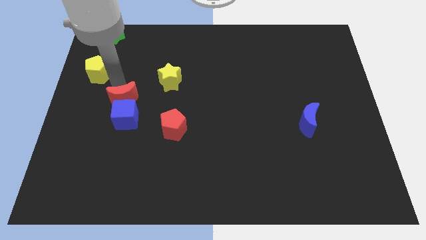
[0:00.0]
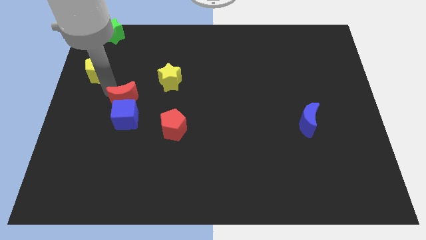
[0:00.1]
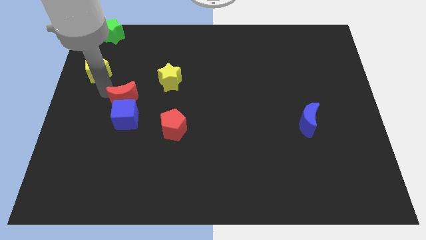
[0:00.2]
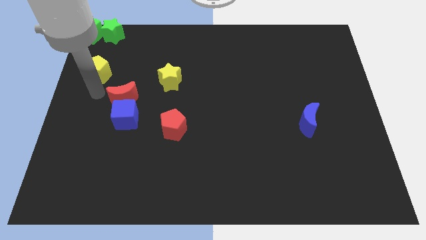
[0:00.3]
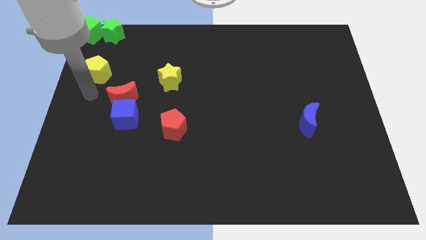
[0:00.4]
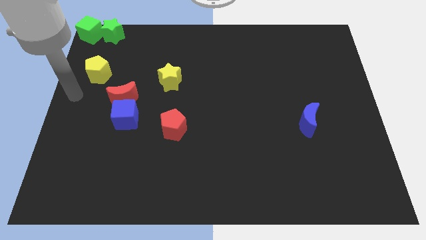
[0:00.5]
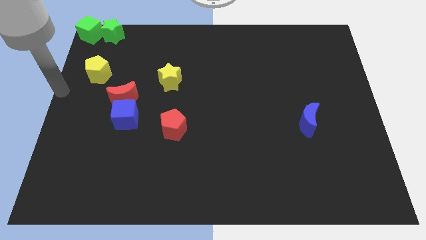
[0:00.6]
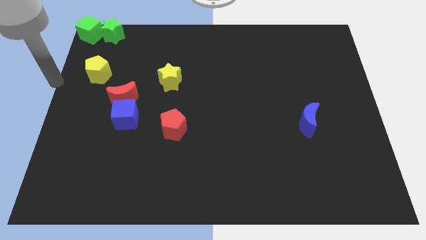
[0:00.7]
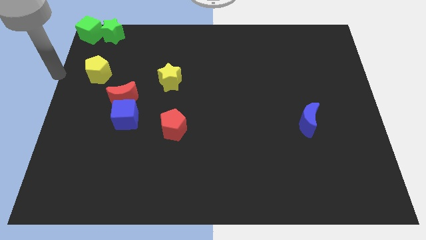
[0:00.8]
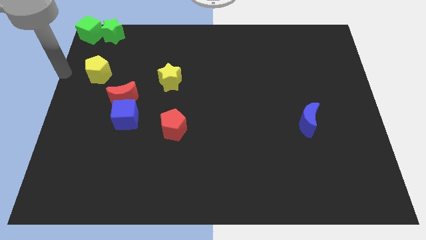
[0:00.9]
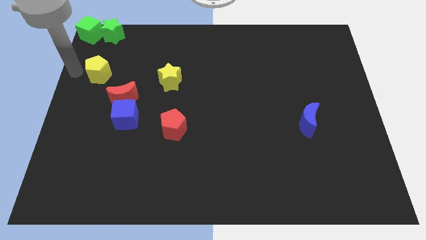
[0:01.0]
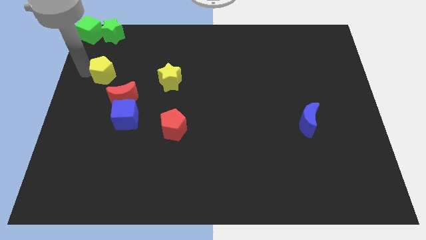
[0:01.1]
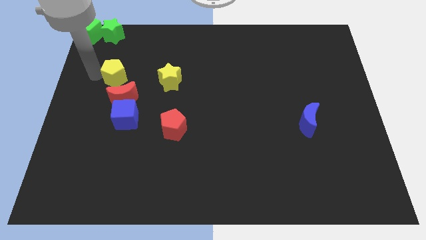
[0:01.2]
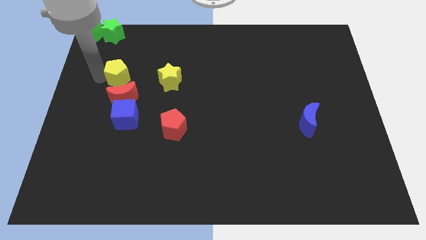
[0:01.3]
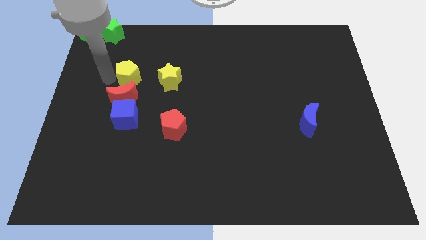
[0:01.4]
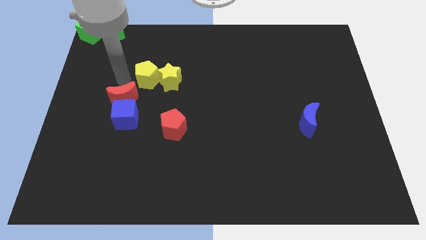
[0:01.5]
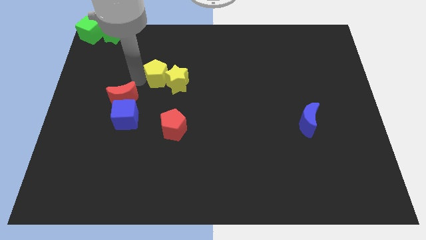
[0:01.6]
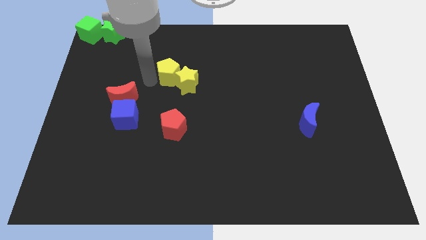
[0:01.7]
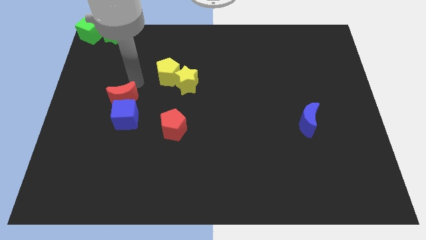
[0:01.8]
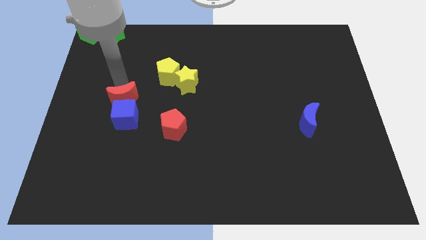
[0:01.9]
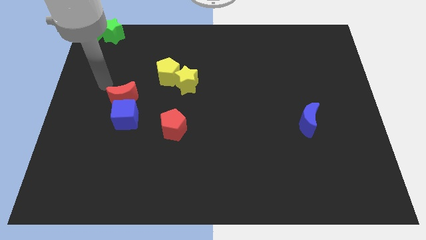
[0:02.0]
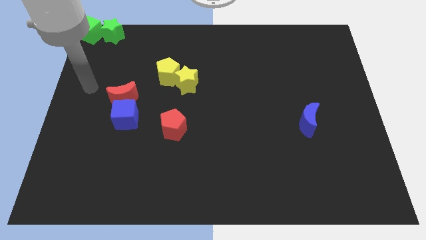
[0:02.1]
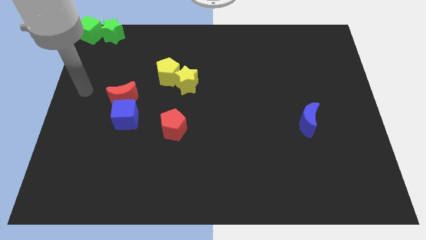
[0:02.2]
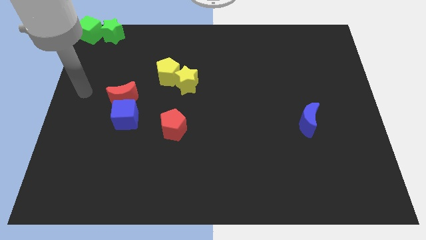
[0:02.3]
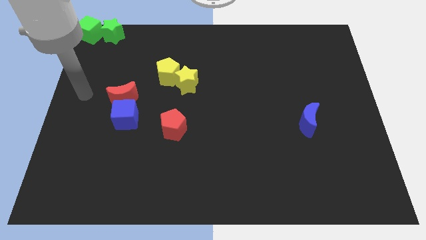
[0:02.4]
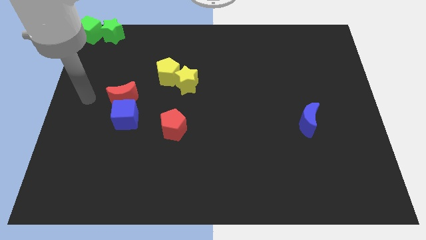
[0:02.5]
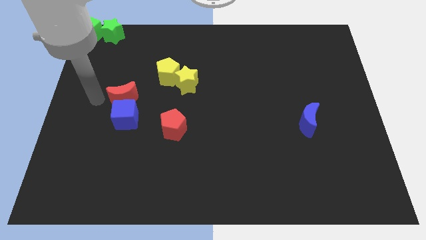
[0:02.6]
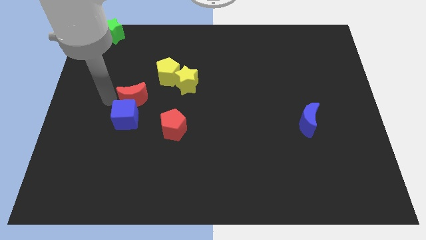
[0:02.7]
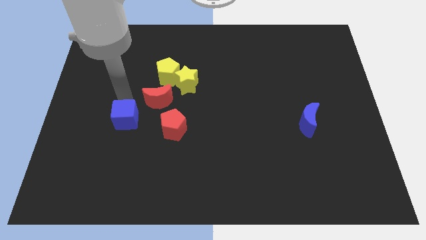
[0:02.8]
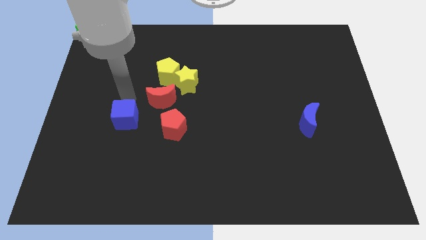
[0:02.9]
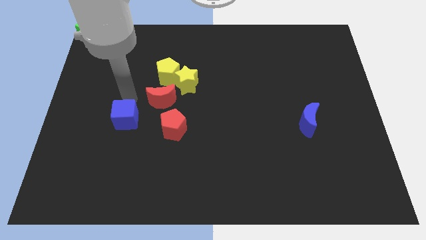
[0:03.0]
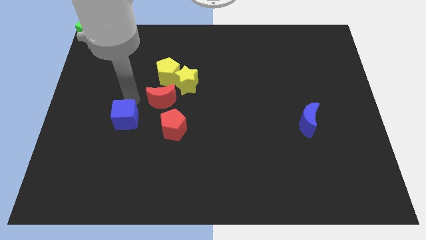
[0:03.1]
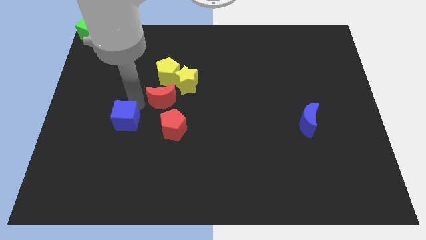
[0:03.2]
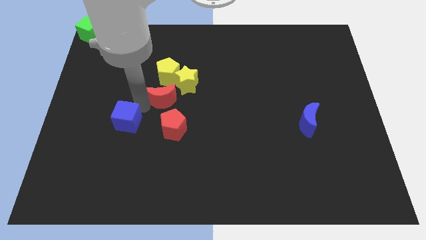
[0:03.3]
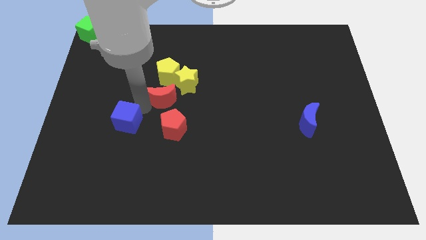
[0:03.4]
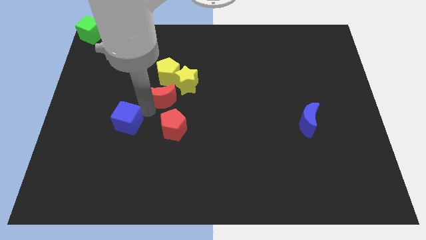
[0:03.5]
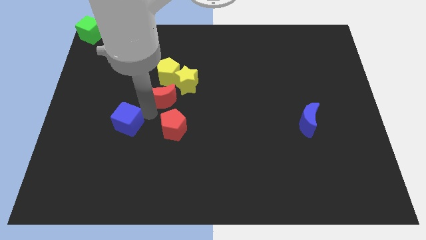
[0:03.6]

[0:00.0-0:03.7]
move red moon and yellow pentagon into yellow star

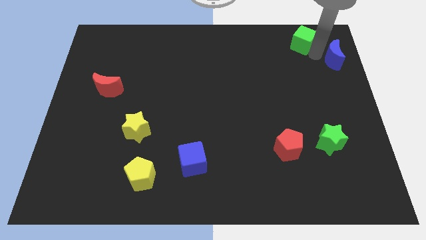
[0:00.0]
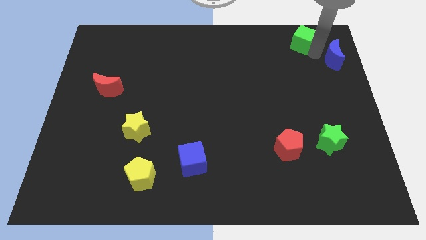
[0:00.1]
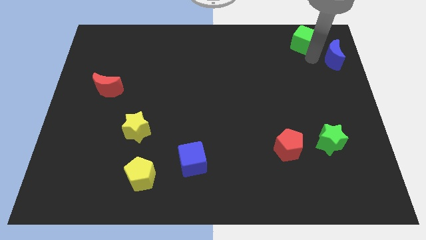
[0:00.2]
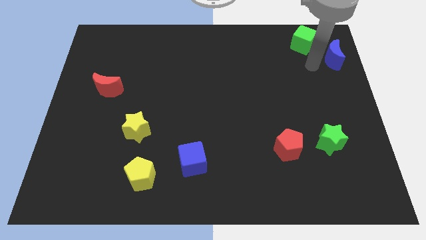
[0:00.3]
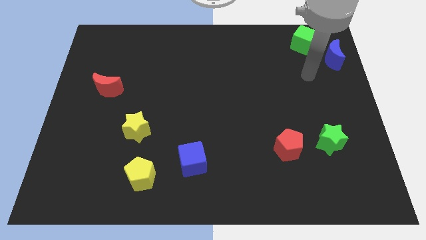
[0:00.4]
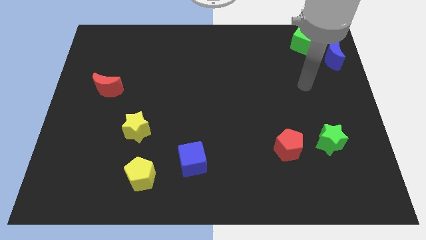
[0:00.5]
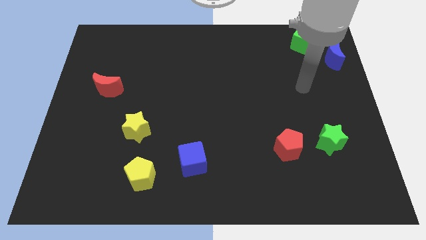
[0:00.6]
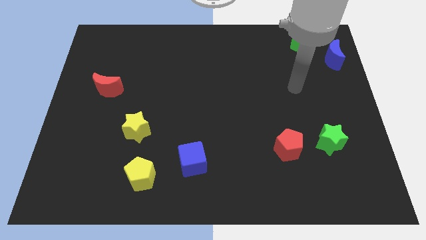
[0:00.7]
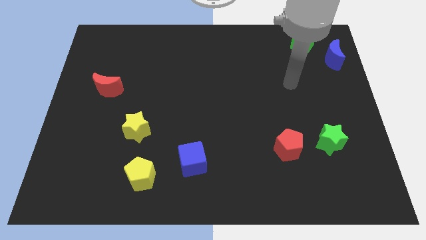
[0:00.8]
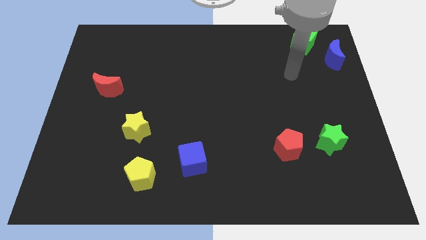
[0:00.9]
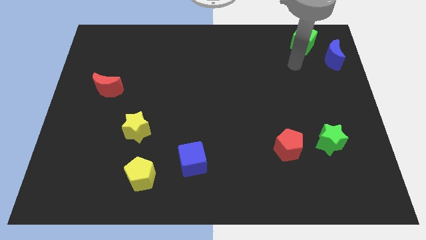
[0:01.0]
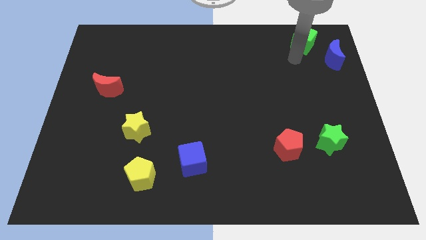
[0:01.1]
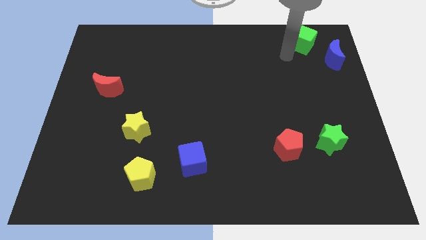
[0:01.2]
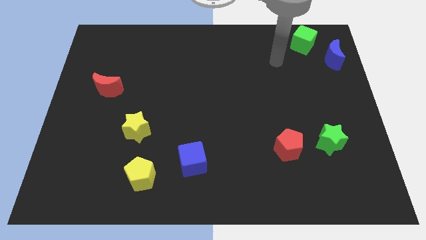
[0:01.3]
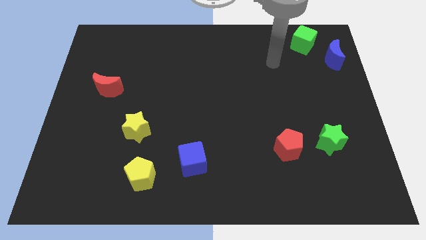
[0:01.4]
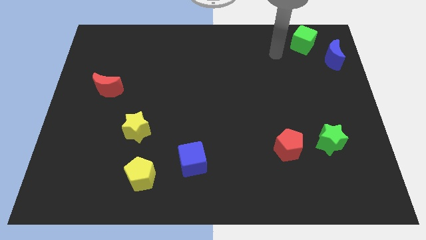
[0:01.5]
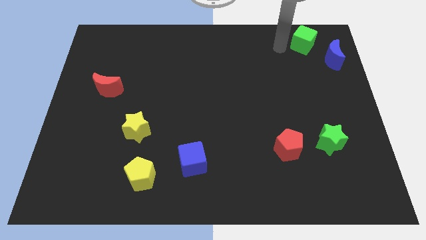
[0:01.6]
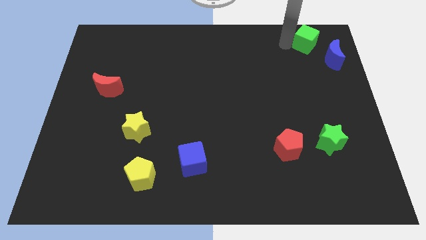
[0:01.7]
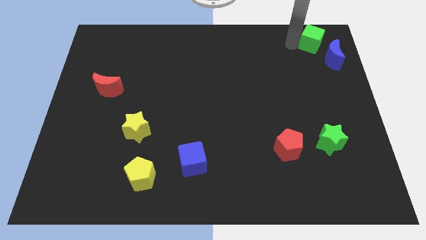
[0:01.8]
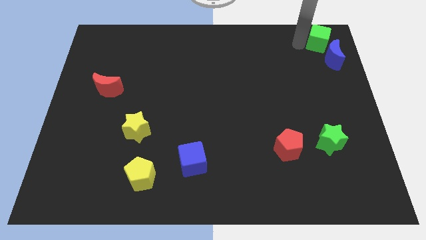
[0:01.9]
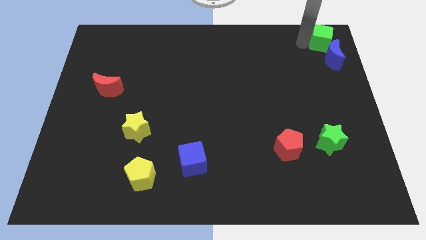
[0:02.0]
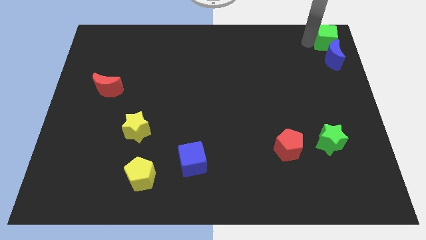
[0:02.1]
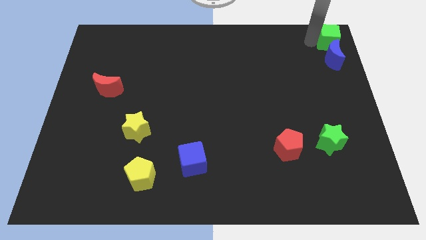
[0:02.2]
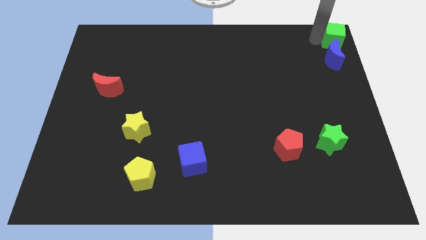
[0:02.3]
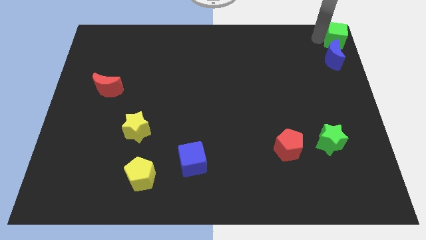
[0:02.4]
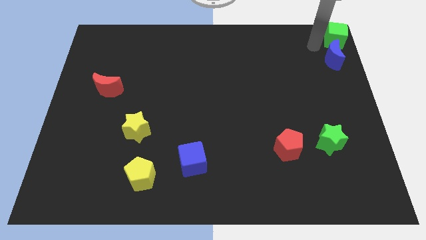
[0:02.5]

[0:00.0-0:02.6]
place the green cube to the top right corner side

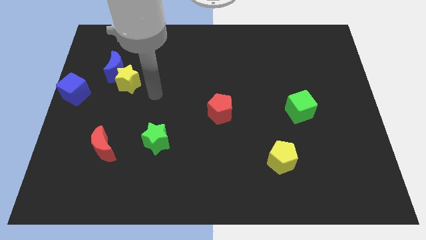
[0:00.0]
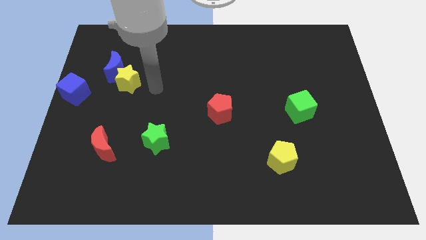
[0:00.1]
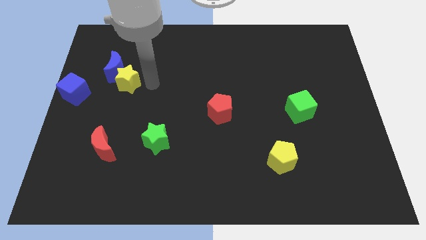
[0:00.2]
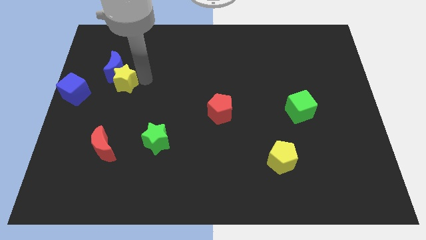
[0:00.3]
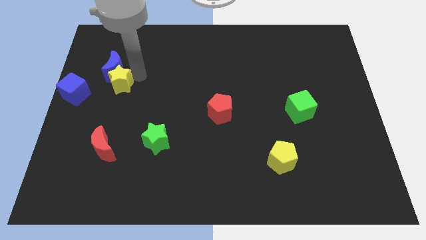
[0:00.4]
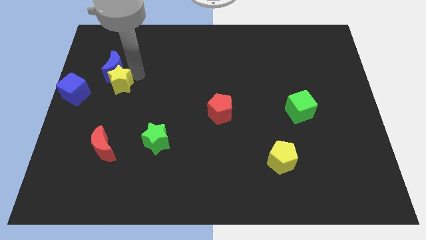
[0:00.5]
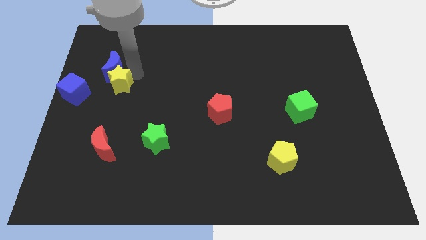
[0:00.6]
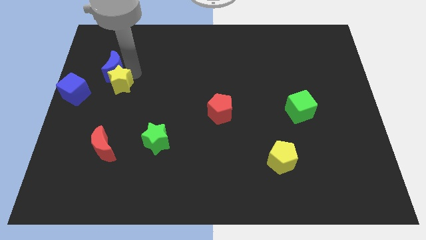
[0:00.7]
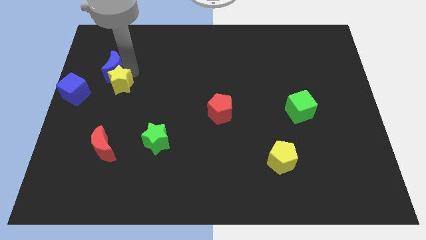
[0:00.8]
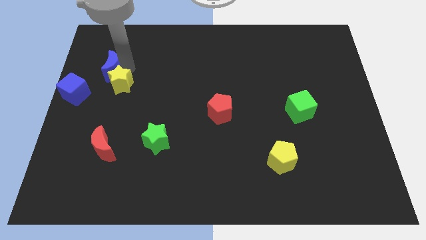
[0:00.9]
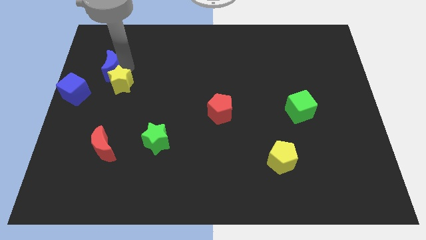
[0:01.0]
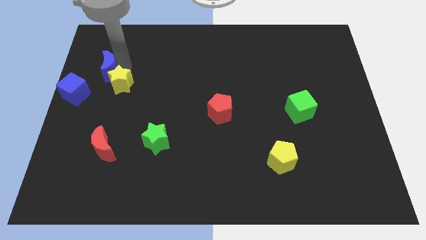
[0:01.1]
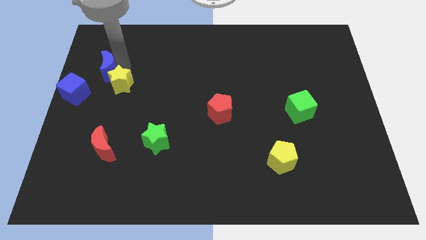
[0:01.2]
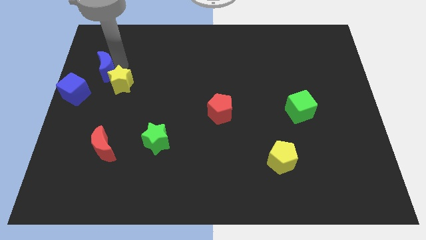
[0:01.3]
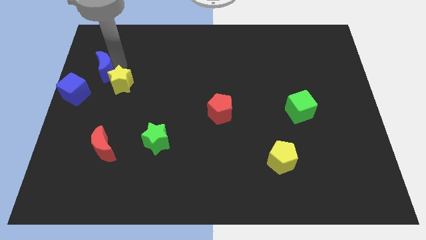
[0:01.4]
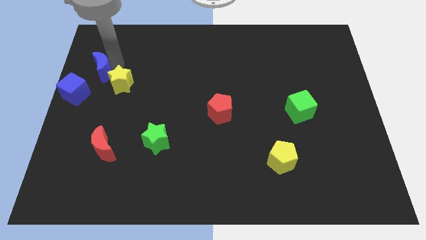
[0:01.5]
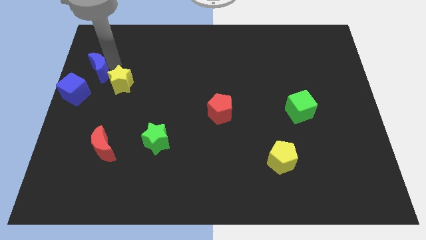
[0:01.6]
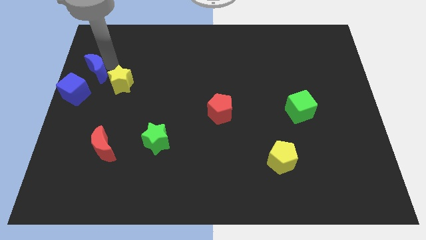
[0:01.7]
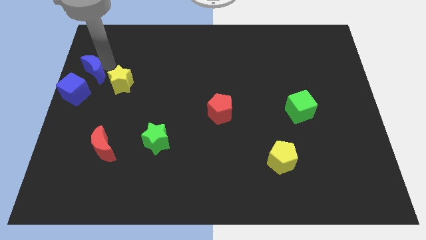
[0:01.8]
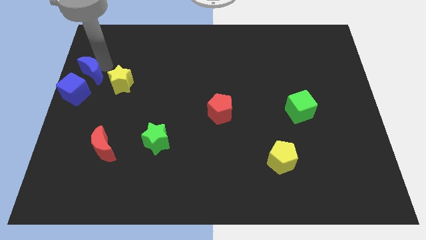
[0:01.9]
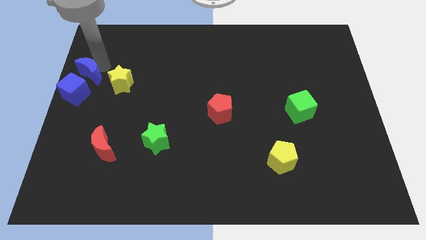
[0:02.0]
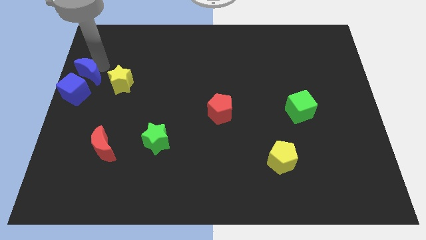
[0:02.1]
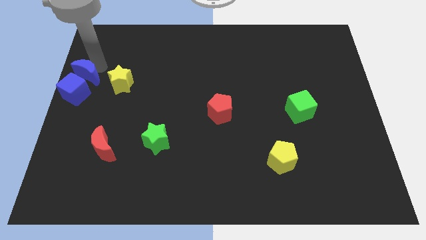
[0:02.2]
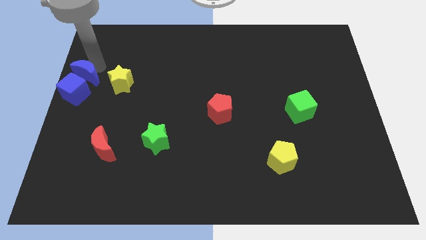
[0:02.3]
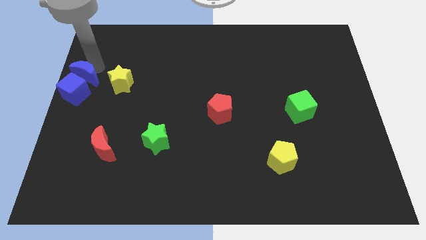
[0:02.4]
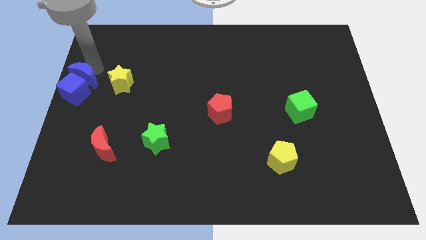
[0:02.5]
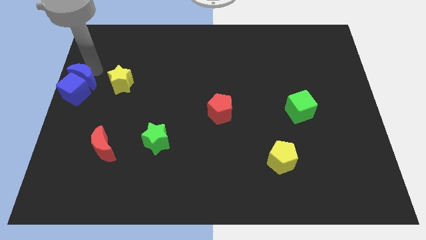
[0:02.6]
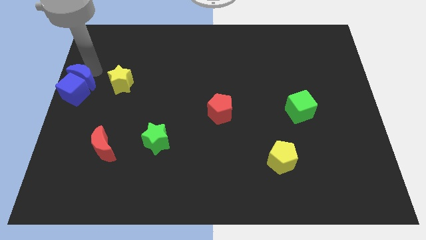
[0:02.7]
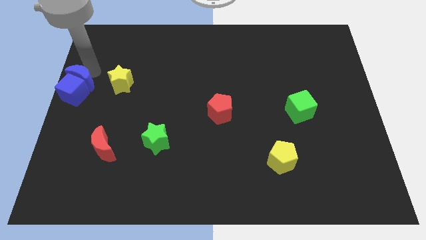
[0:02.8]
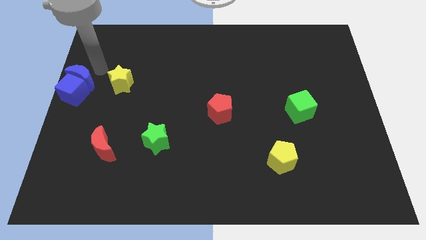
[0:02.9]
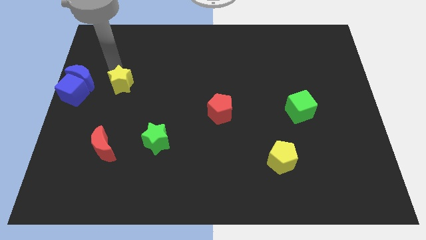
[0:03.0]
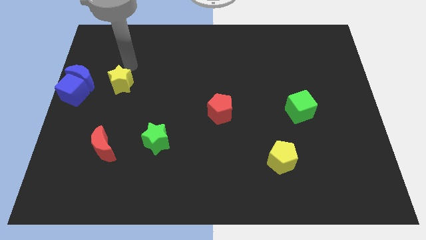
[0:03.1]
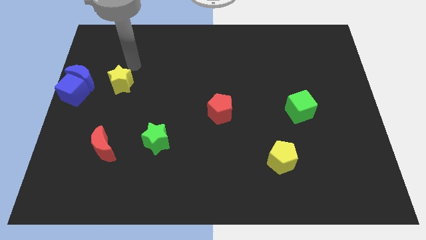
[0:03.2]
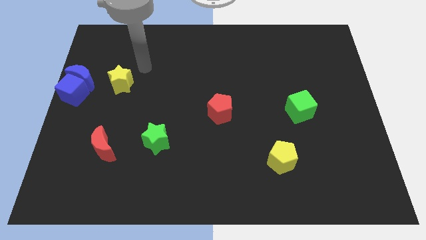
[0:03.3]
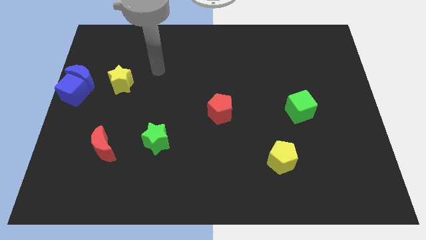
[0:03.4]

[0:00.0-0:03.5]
push the blue moon into blue cube
